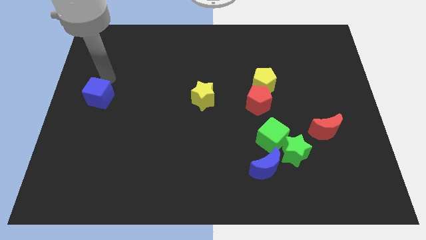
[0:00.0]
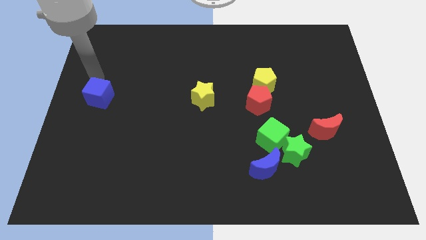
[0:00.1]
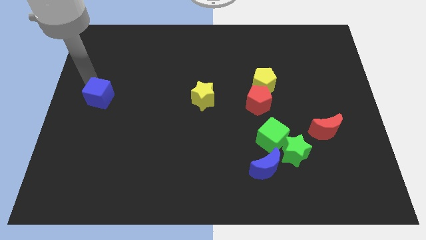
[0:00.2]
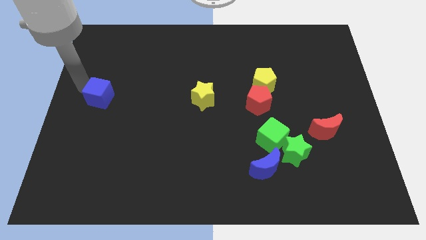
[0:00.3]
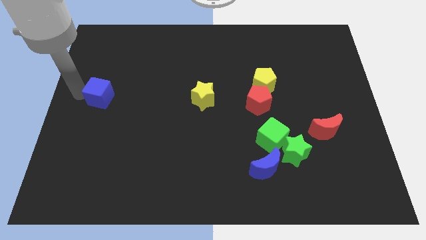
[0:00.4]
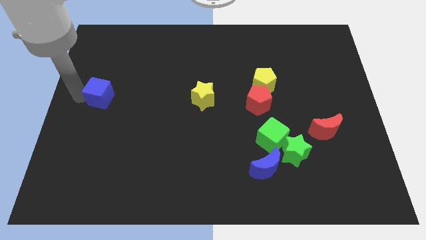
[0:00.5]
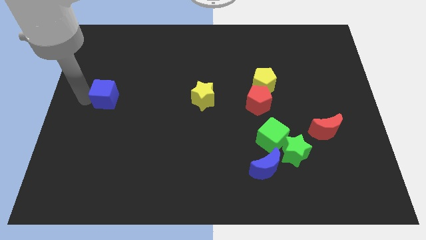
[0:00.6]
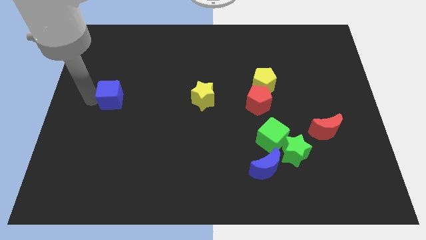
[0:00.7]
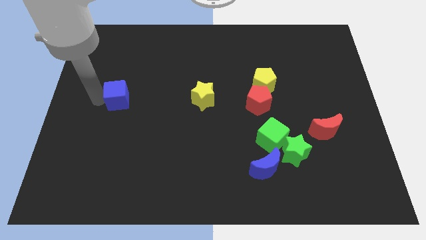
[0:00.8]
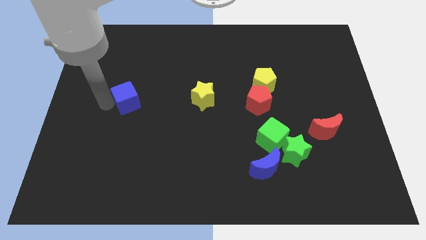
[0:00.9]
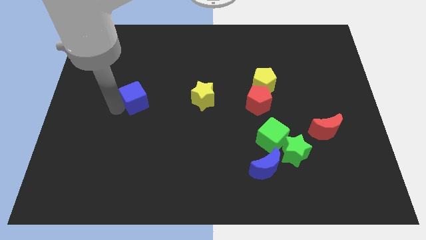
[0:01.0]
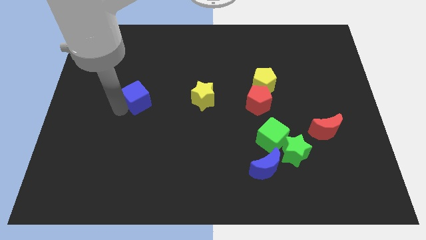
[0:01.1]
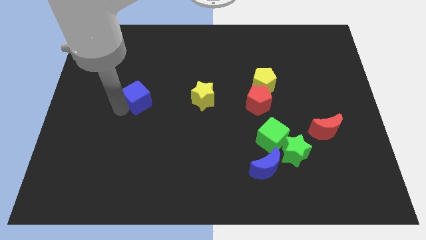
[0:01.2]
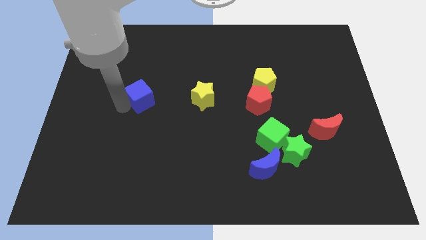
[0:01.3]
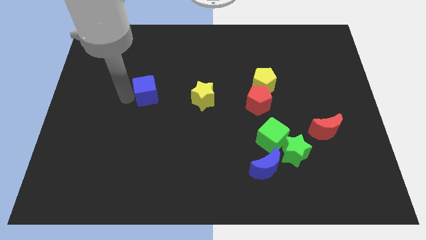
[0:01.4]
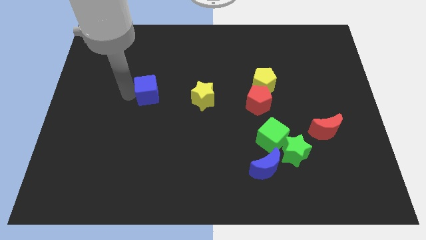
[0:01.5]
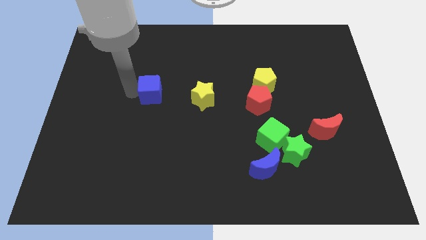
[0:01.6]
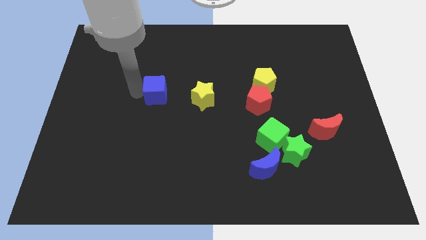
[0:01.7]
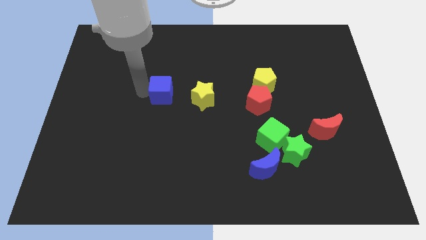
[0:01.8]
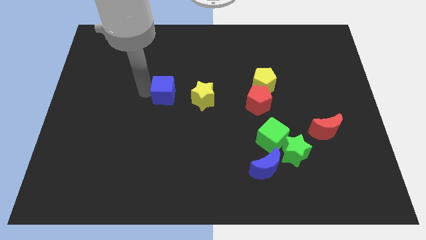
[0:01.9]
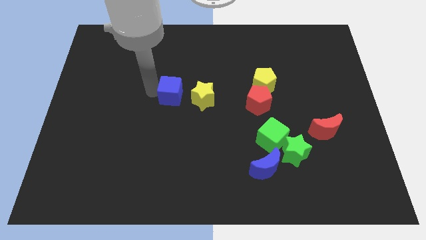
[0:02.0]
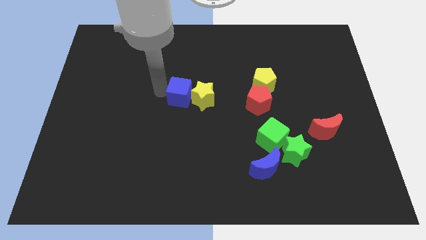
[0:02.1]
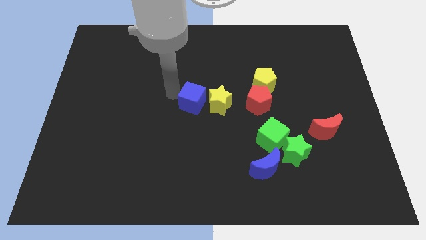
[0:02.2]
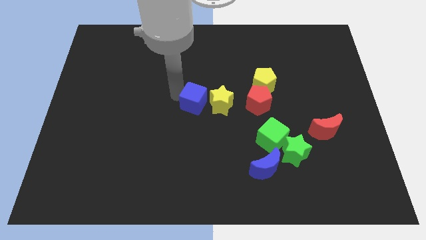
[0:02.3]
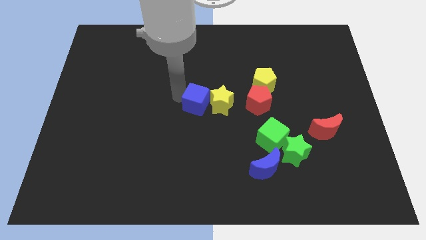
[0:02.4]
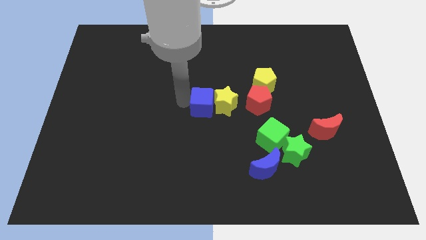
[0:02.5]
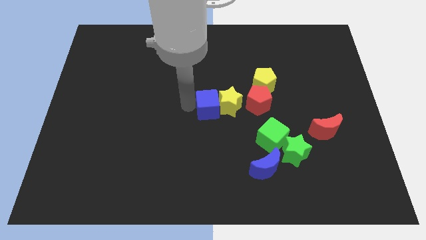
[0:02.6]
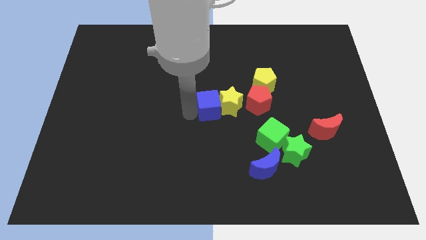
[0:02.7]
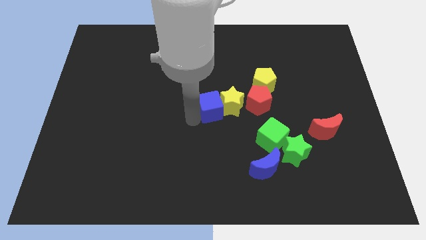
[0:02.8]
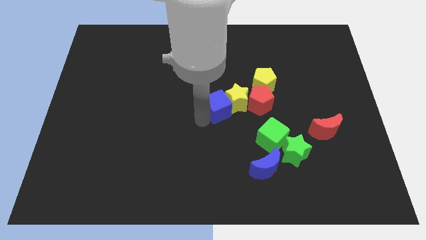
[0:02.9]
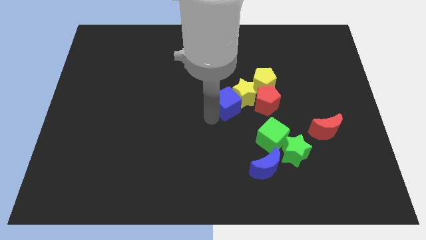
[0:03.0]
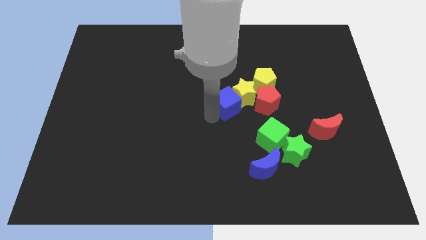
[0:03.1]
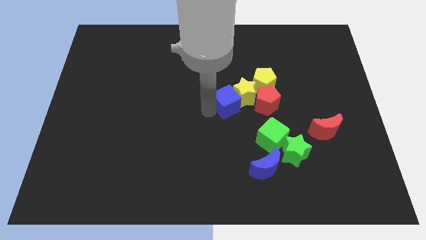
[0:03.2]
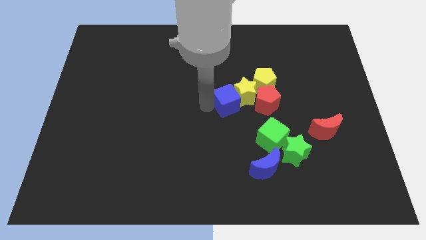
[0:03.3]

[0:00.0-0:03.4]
move the blue cube to left beside of the yellow star

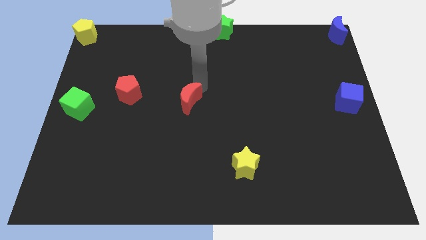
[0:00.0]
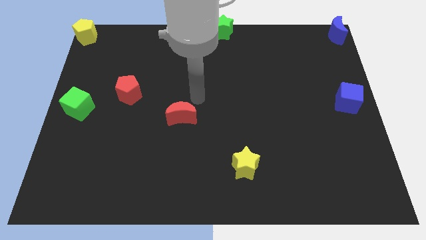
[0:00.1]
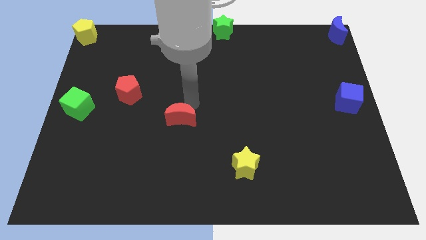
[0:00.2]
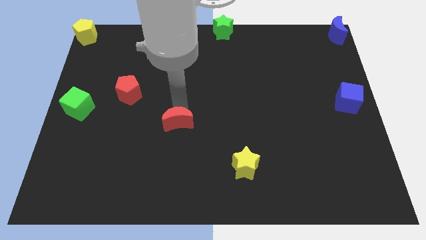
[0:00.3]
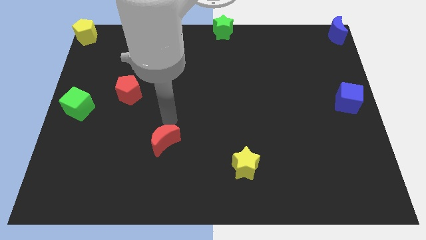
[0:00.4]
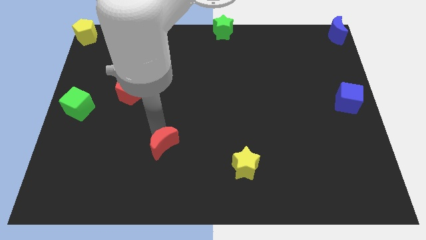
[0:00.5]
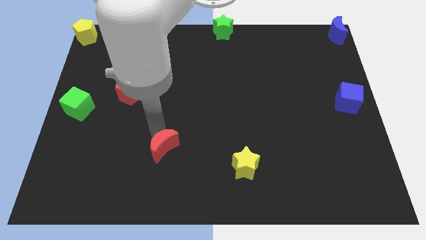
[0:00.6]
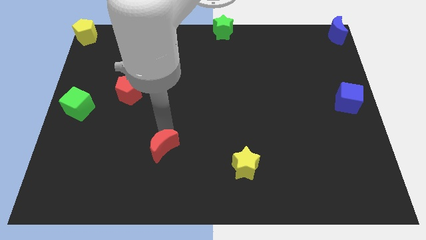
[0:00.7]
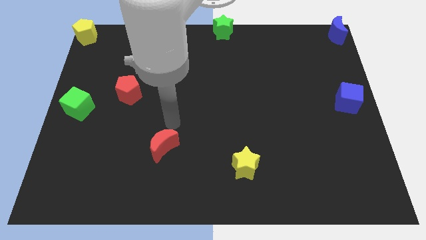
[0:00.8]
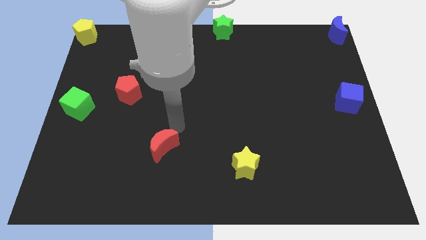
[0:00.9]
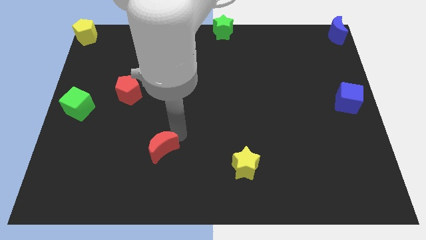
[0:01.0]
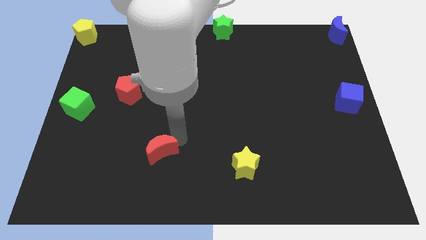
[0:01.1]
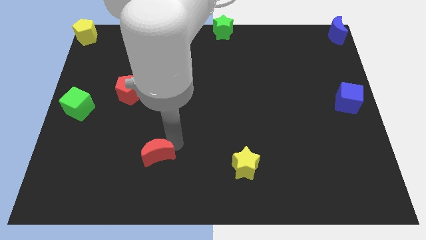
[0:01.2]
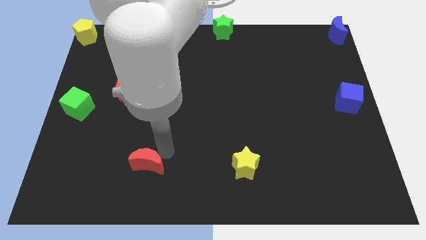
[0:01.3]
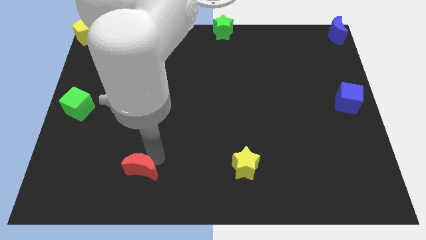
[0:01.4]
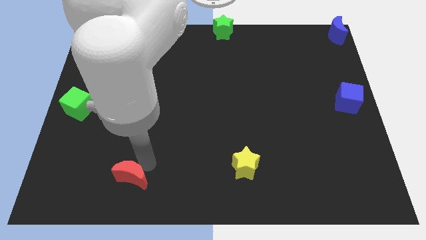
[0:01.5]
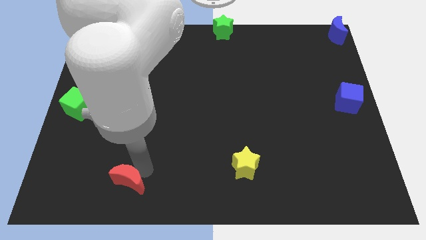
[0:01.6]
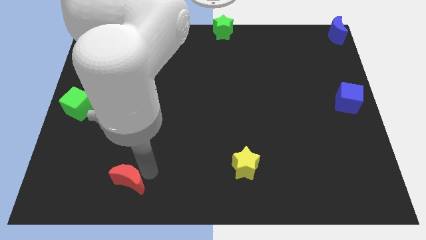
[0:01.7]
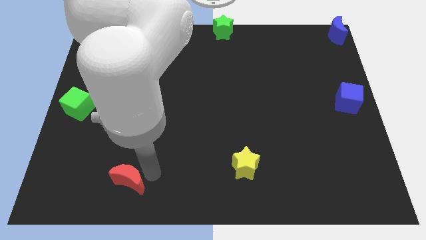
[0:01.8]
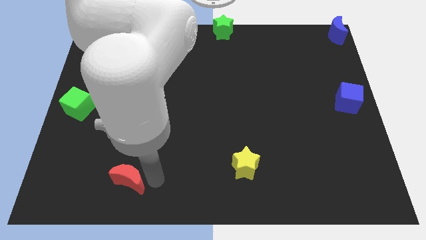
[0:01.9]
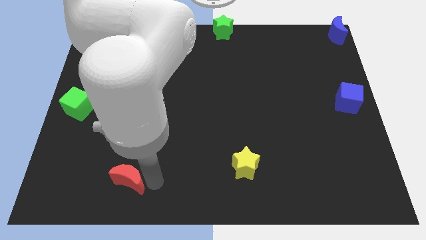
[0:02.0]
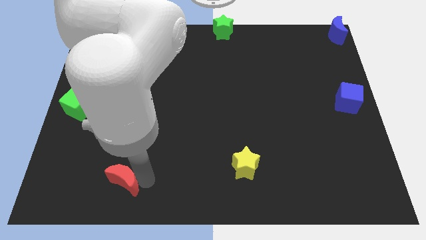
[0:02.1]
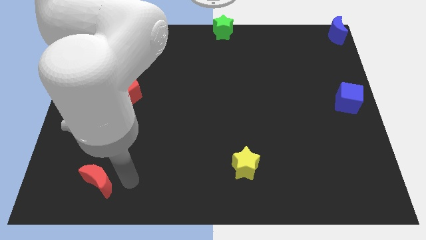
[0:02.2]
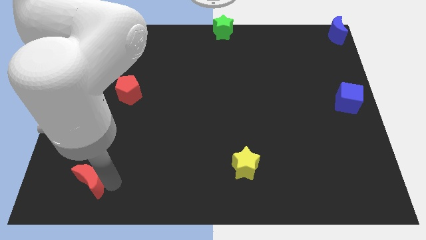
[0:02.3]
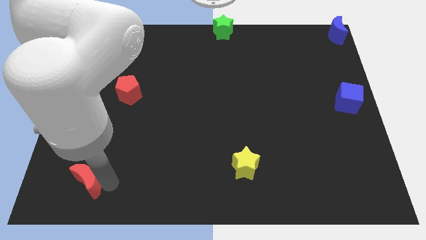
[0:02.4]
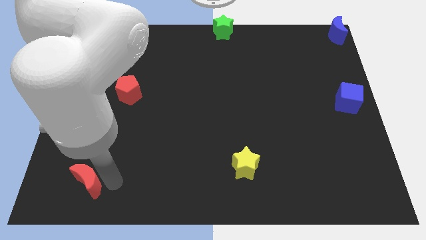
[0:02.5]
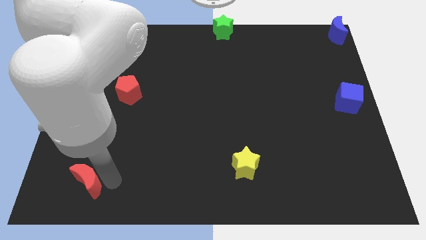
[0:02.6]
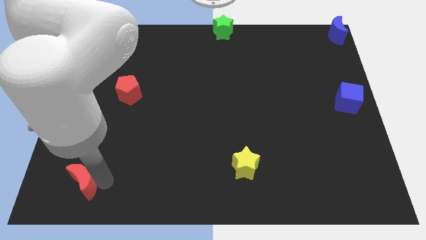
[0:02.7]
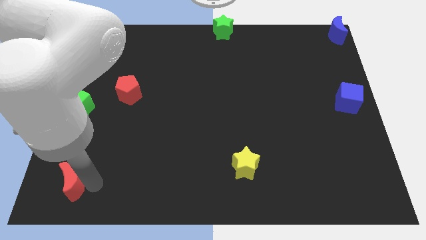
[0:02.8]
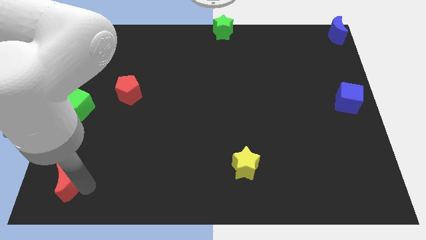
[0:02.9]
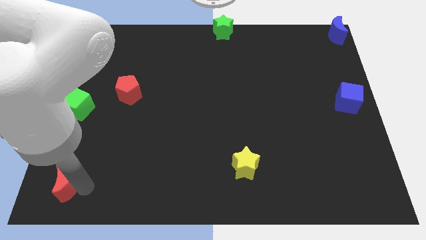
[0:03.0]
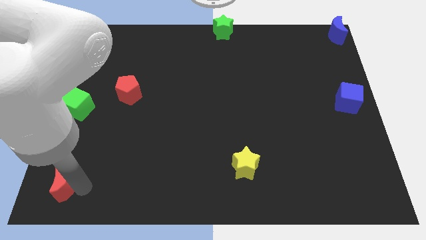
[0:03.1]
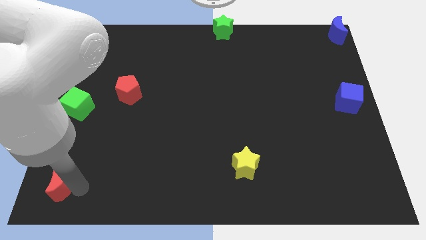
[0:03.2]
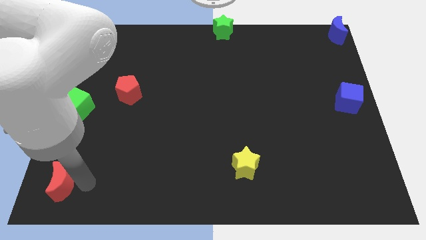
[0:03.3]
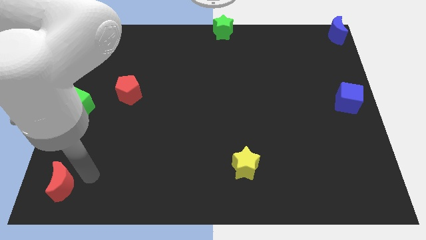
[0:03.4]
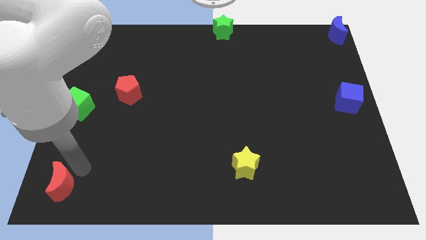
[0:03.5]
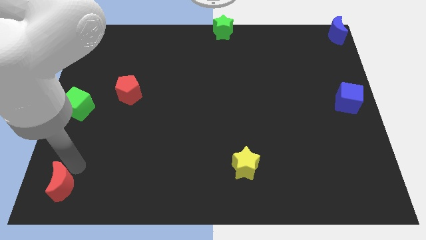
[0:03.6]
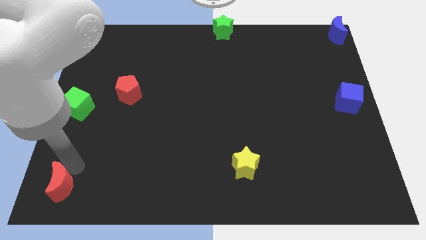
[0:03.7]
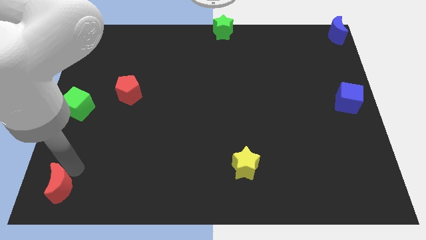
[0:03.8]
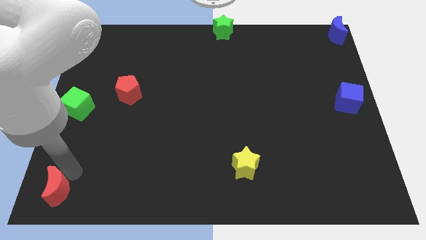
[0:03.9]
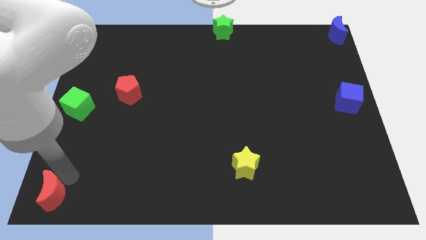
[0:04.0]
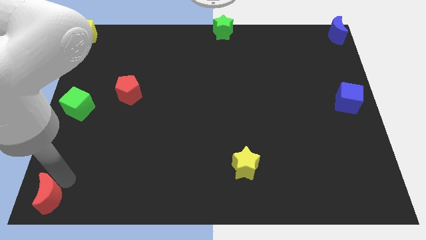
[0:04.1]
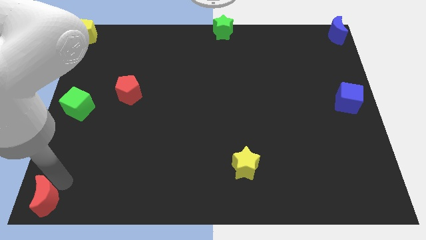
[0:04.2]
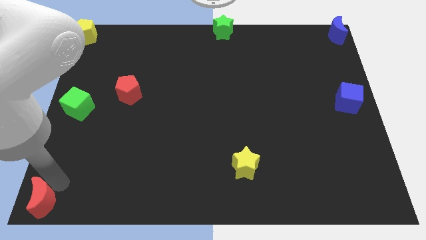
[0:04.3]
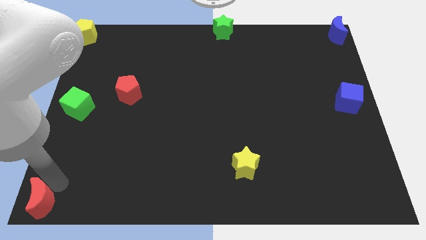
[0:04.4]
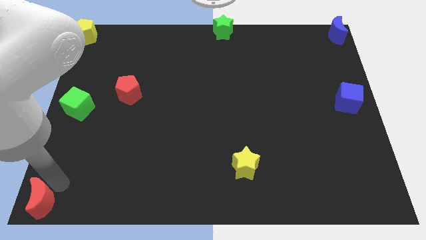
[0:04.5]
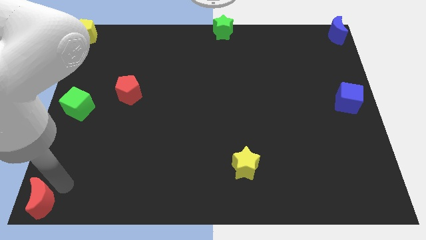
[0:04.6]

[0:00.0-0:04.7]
slide red moon to the bottom left corner of the board

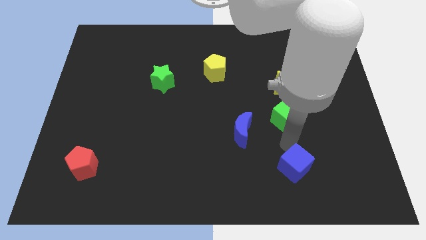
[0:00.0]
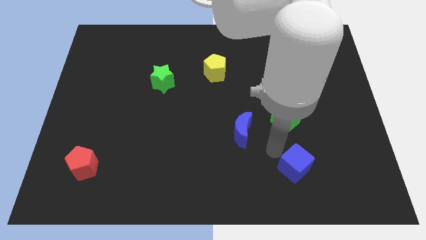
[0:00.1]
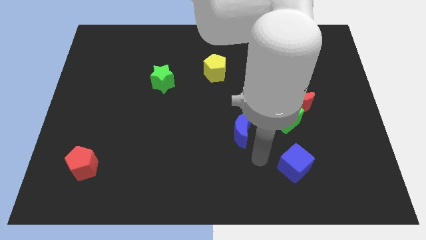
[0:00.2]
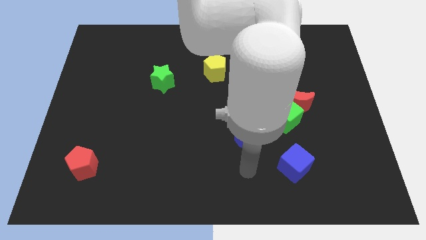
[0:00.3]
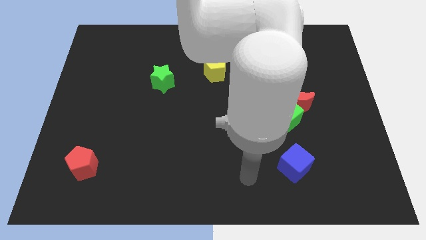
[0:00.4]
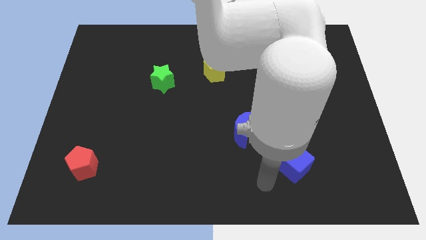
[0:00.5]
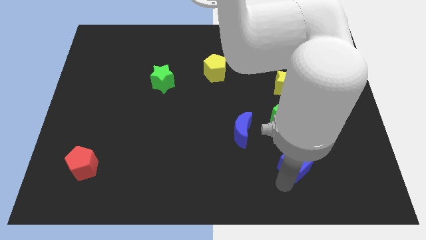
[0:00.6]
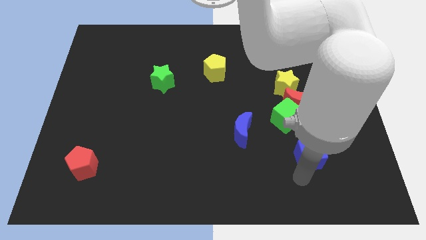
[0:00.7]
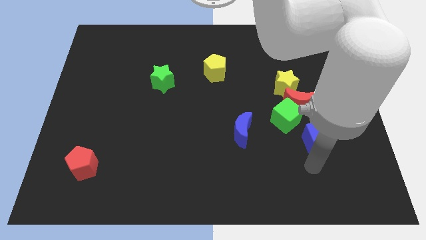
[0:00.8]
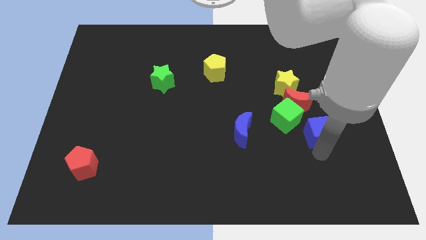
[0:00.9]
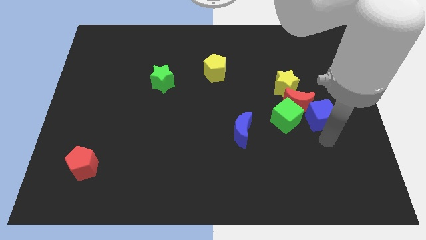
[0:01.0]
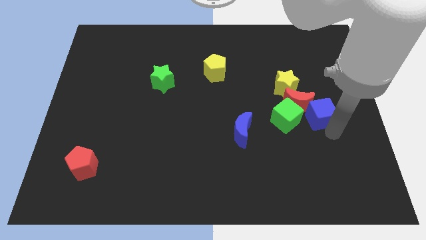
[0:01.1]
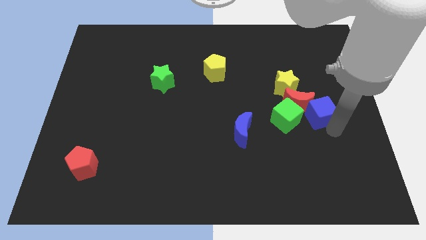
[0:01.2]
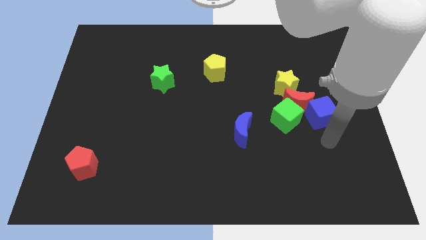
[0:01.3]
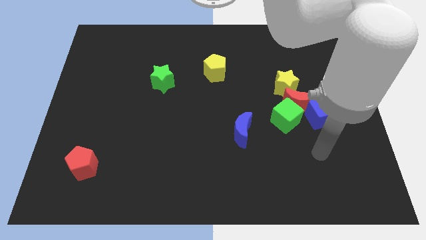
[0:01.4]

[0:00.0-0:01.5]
place the blue cube to the right of the green cube
